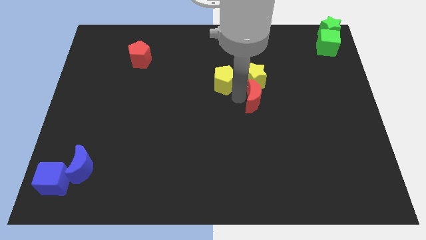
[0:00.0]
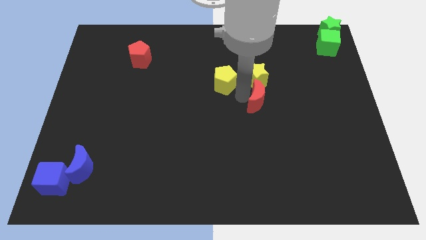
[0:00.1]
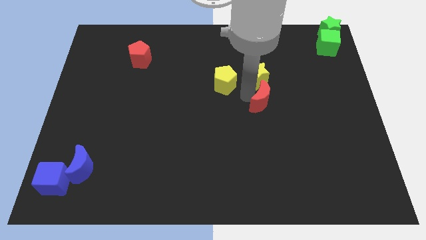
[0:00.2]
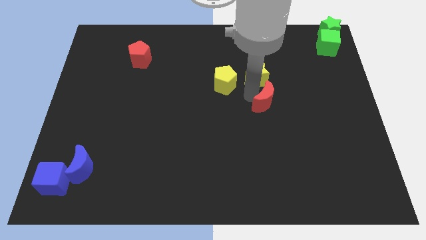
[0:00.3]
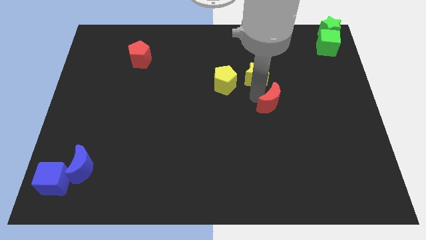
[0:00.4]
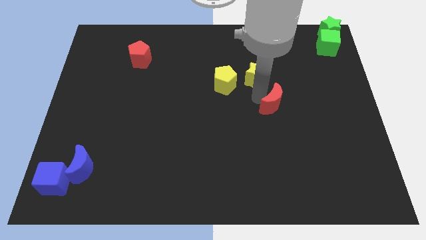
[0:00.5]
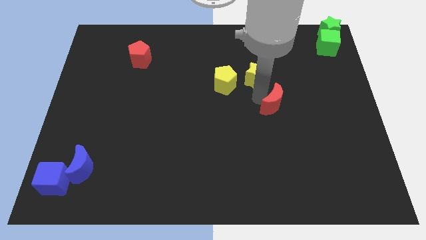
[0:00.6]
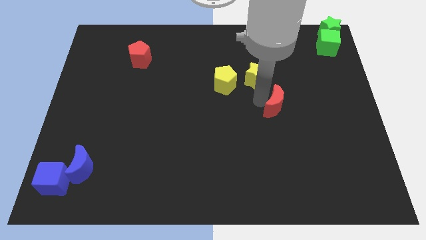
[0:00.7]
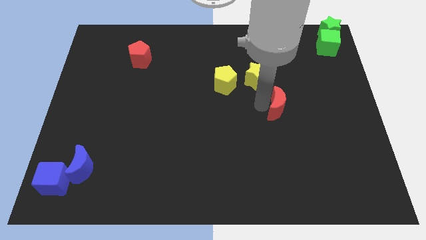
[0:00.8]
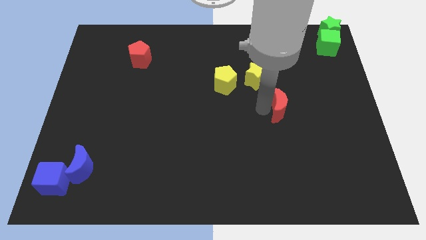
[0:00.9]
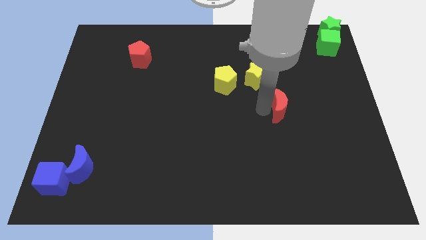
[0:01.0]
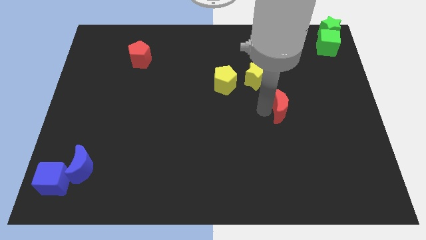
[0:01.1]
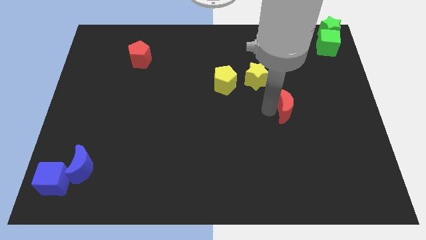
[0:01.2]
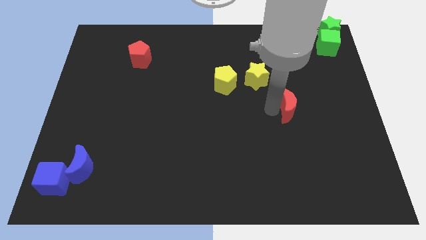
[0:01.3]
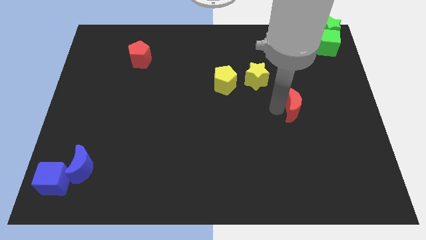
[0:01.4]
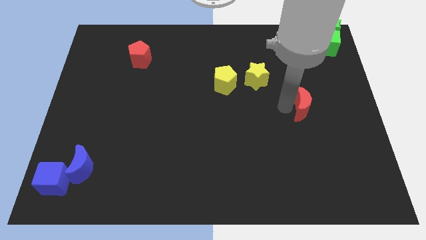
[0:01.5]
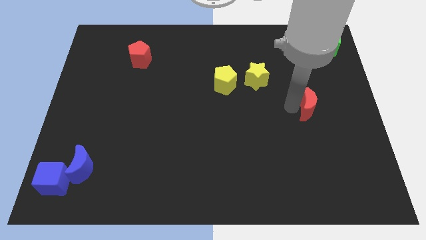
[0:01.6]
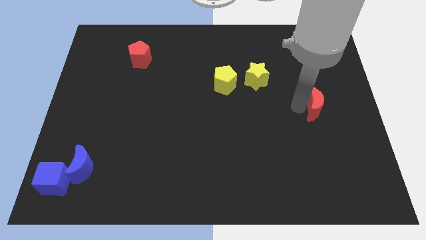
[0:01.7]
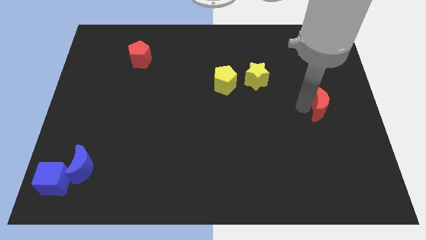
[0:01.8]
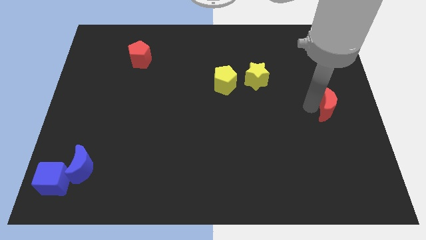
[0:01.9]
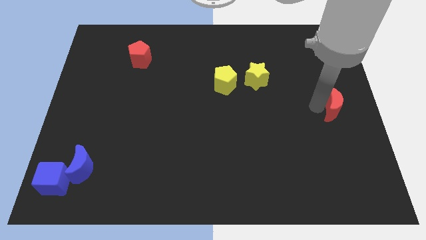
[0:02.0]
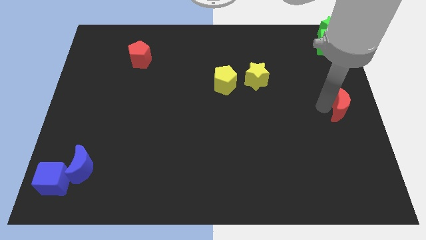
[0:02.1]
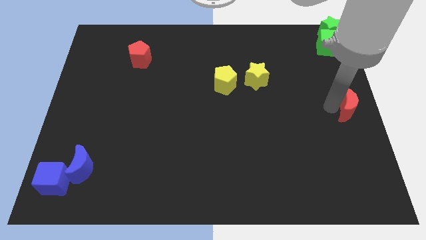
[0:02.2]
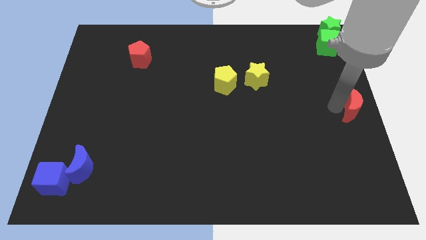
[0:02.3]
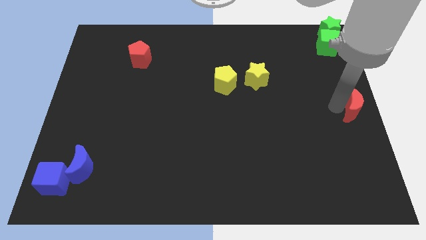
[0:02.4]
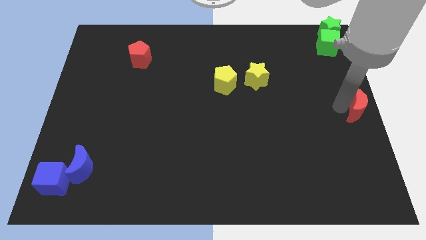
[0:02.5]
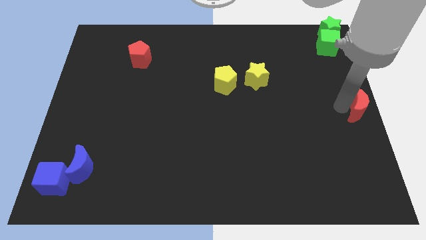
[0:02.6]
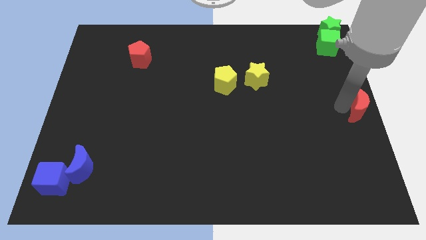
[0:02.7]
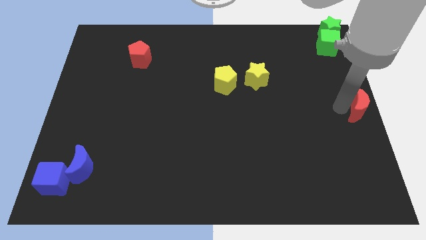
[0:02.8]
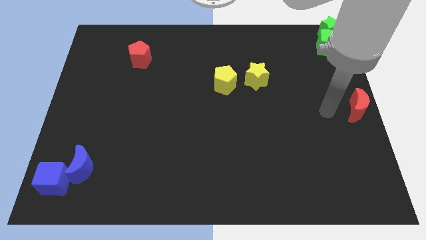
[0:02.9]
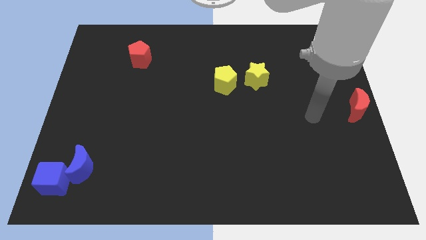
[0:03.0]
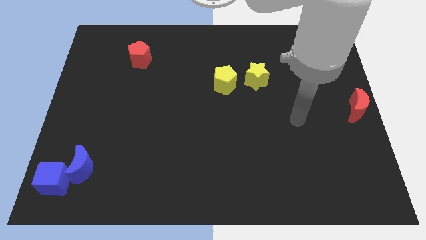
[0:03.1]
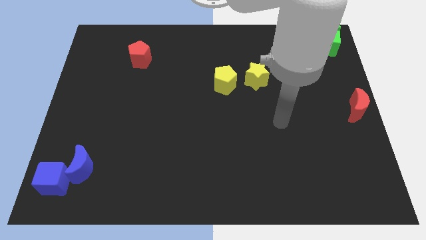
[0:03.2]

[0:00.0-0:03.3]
put the red pentagon to the center right side of the board

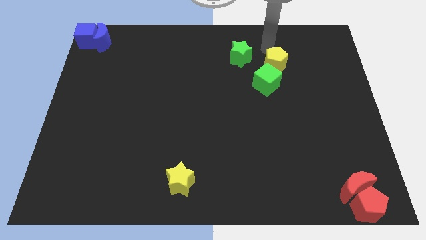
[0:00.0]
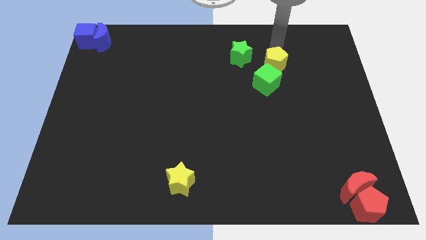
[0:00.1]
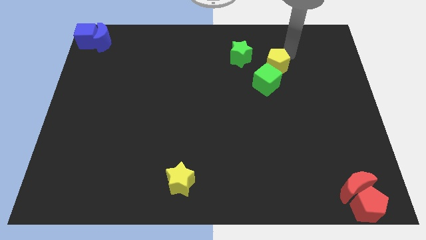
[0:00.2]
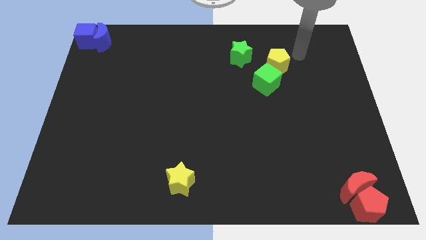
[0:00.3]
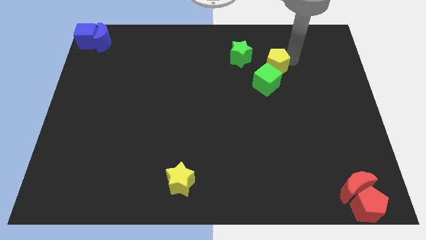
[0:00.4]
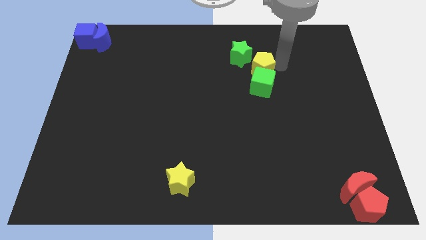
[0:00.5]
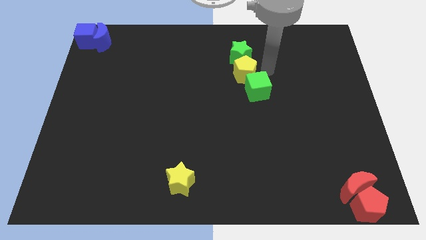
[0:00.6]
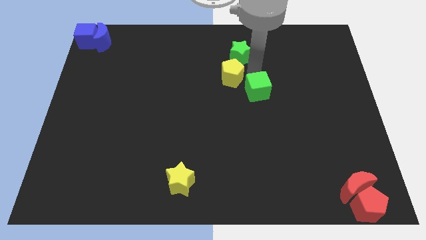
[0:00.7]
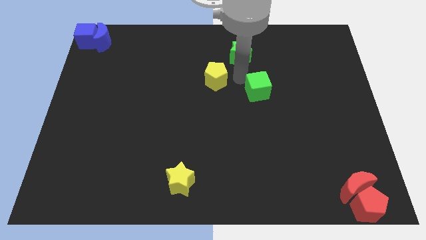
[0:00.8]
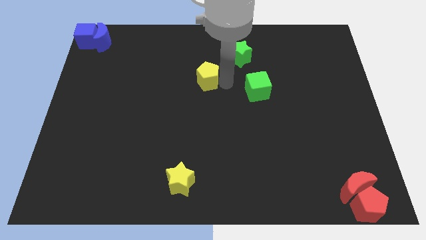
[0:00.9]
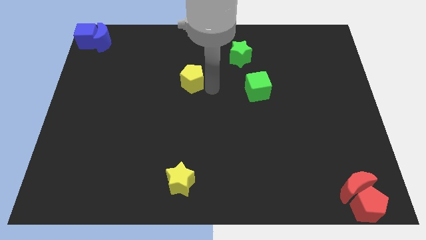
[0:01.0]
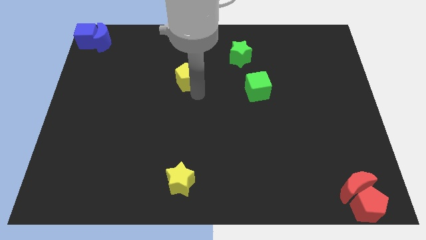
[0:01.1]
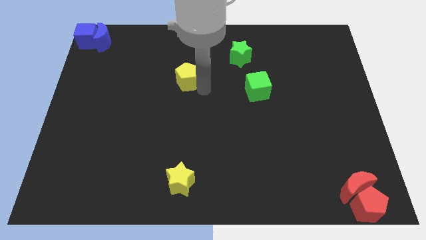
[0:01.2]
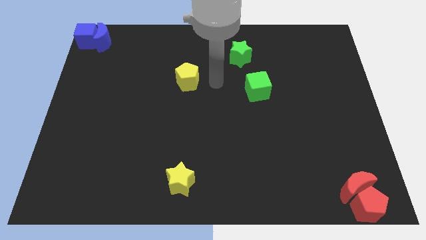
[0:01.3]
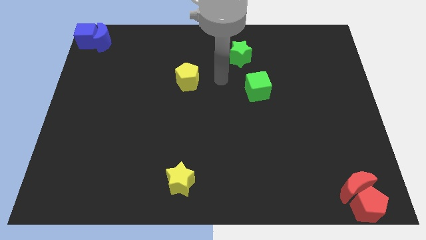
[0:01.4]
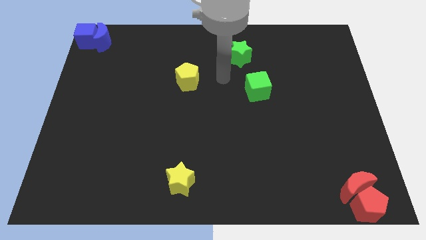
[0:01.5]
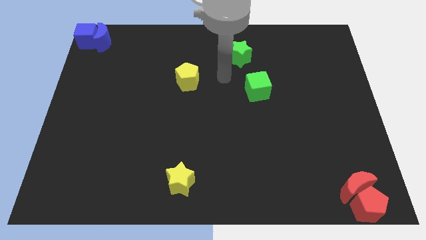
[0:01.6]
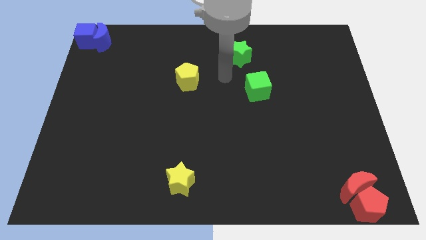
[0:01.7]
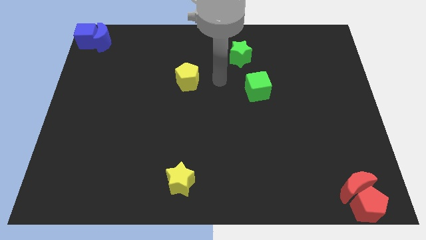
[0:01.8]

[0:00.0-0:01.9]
push the yellow pentagon to the center

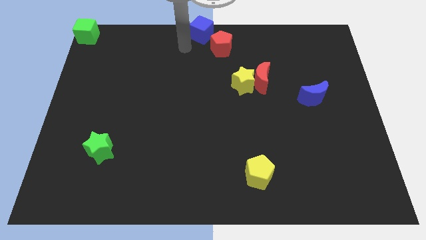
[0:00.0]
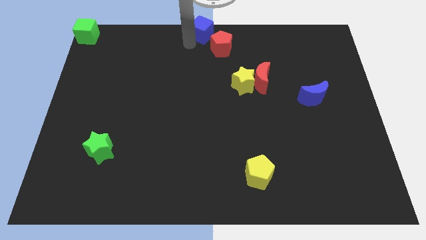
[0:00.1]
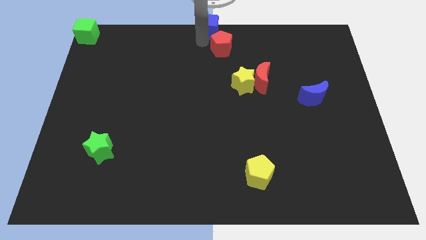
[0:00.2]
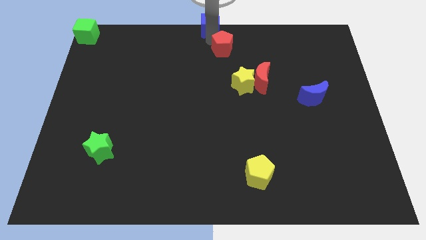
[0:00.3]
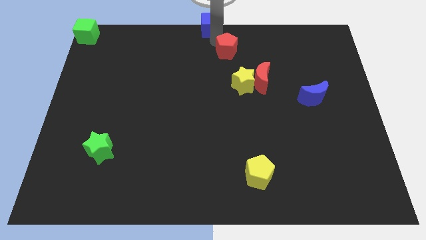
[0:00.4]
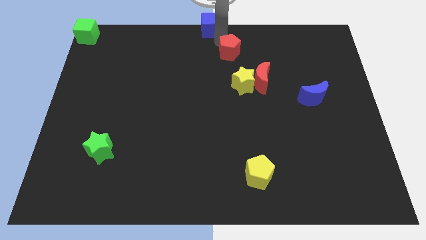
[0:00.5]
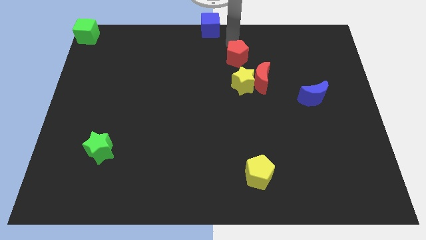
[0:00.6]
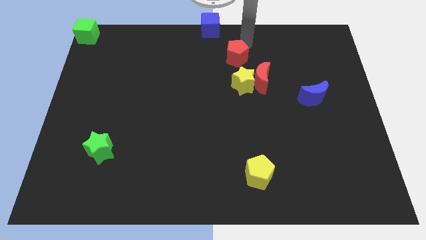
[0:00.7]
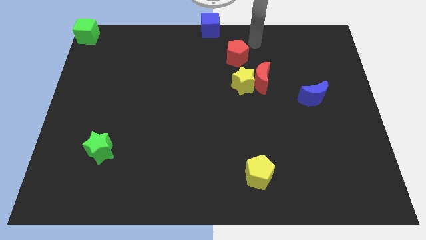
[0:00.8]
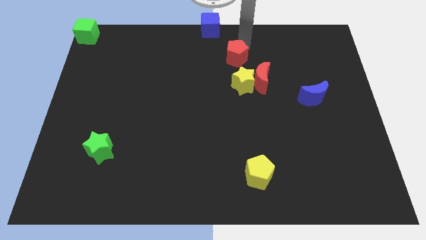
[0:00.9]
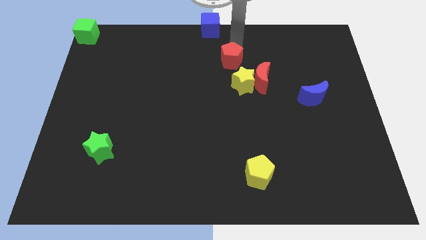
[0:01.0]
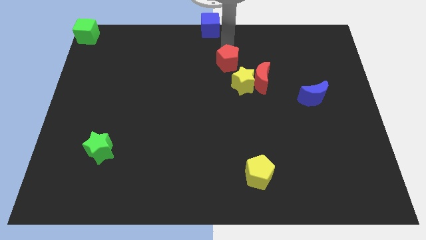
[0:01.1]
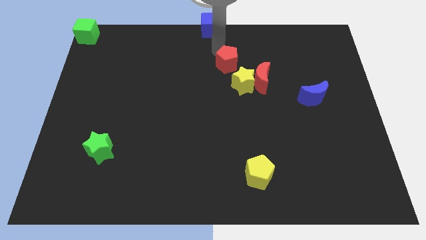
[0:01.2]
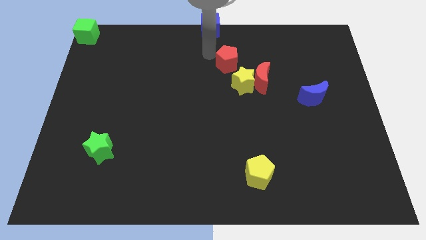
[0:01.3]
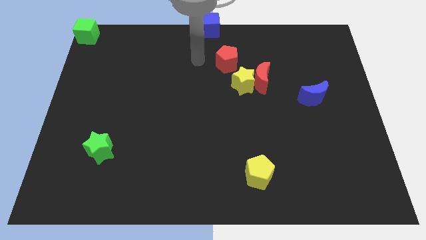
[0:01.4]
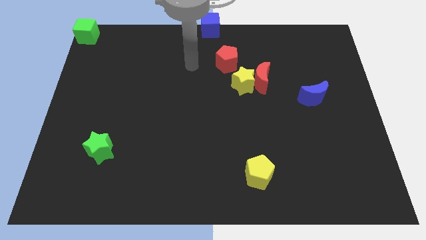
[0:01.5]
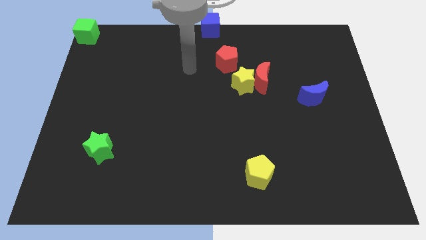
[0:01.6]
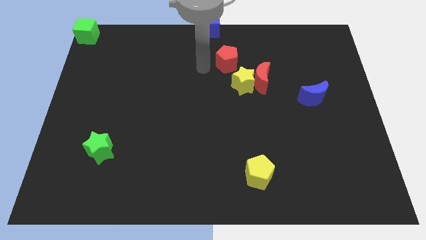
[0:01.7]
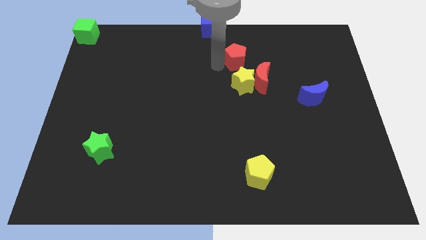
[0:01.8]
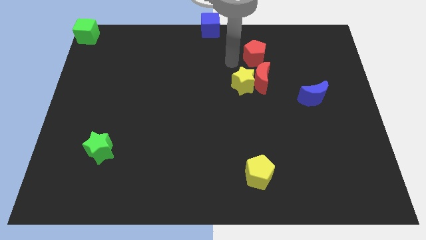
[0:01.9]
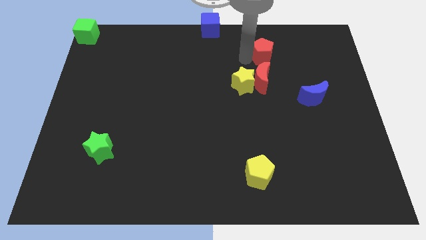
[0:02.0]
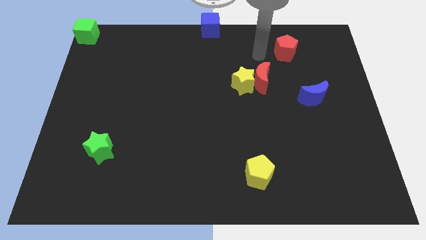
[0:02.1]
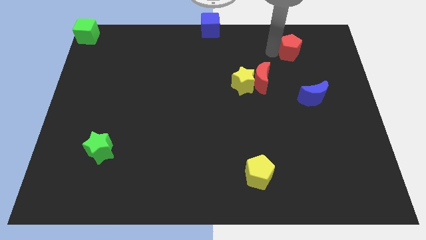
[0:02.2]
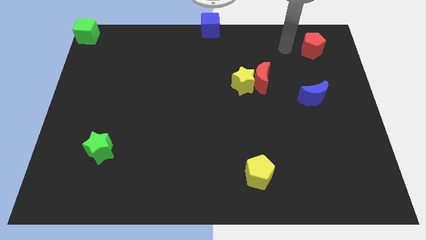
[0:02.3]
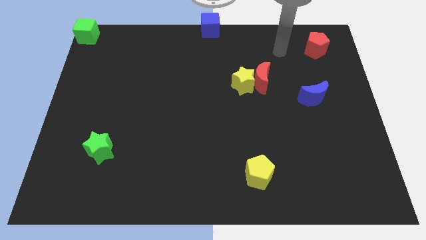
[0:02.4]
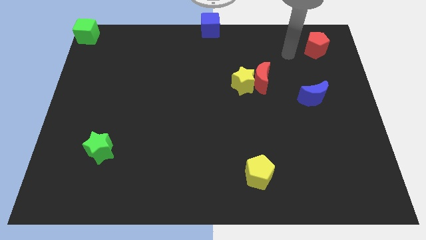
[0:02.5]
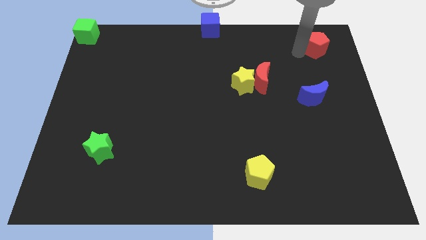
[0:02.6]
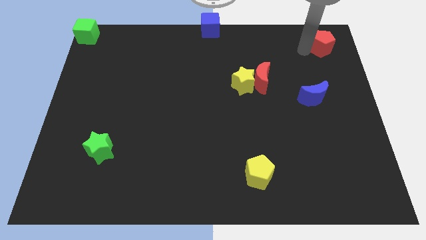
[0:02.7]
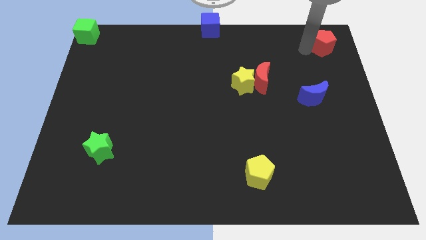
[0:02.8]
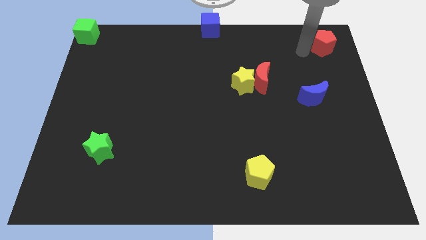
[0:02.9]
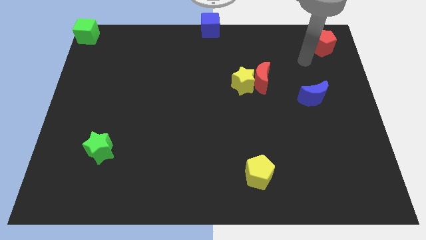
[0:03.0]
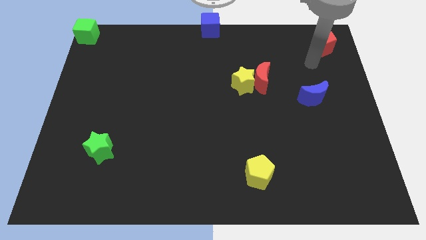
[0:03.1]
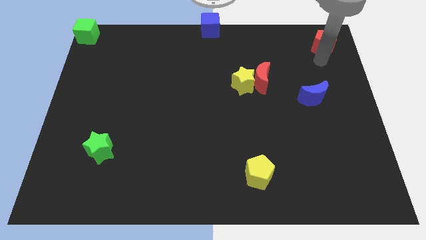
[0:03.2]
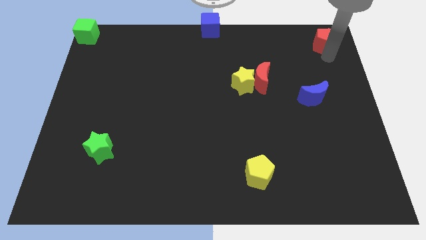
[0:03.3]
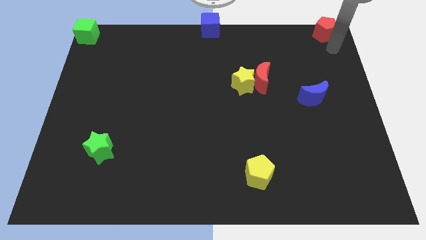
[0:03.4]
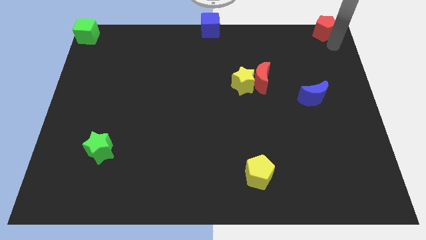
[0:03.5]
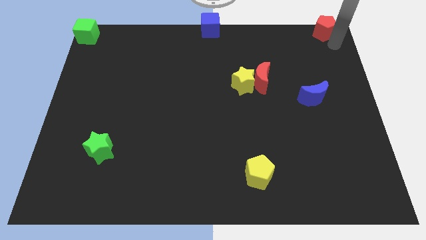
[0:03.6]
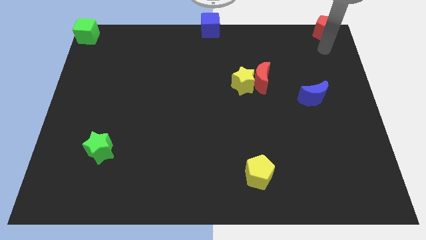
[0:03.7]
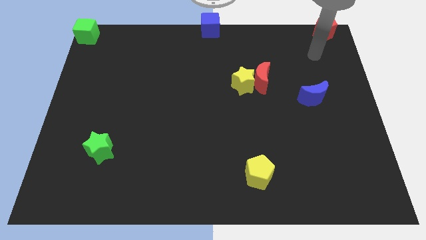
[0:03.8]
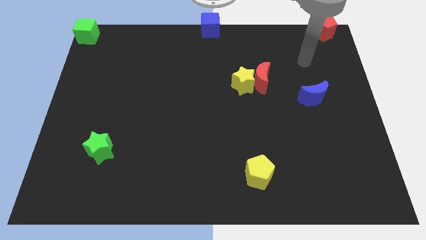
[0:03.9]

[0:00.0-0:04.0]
move the red pentagon towards the top right corner of the board
